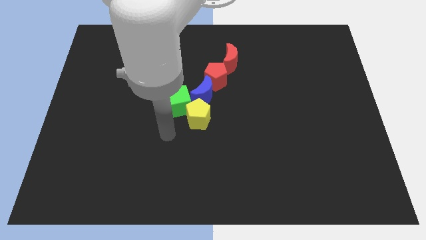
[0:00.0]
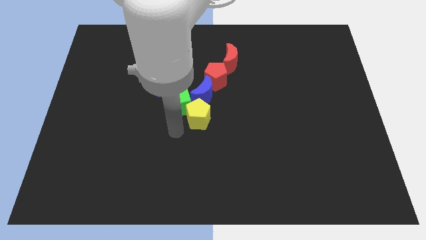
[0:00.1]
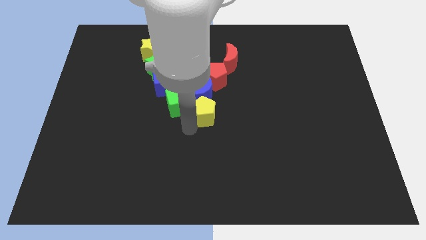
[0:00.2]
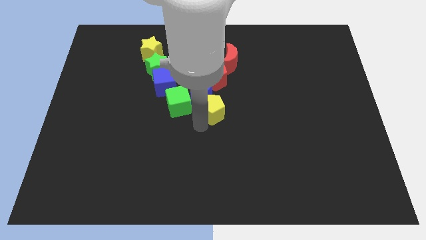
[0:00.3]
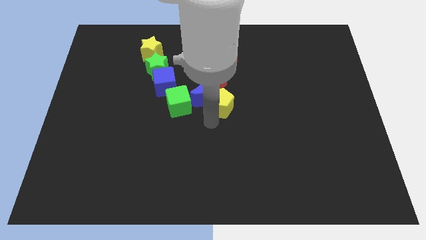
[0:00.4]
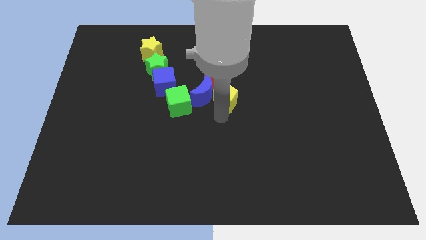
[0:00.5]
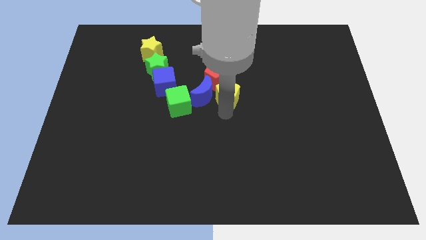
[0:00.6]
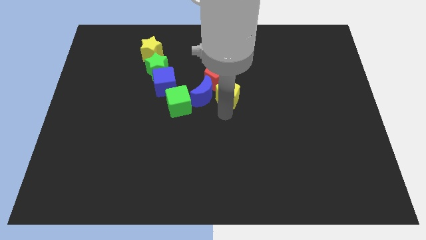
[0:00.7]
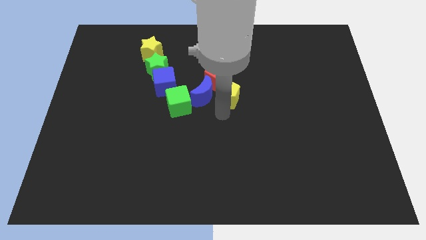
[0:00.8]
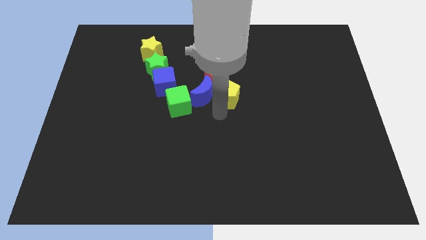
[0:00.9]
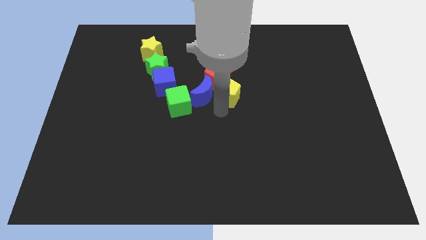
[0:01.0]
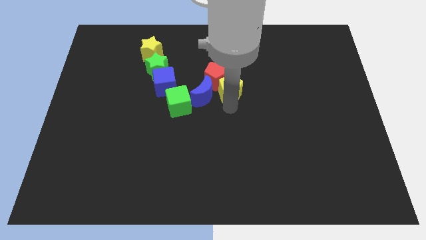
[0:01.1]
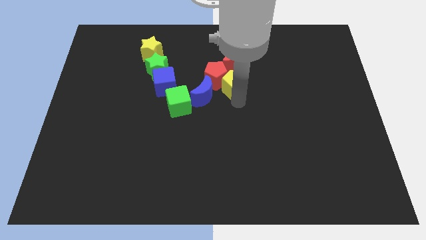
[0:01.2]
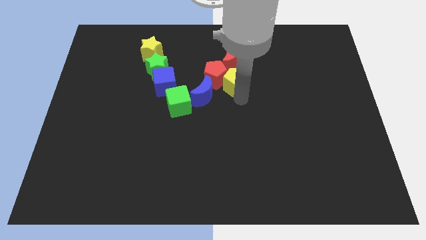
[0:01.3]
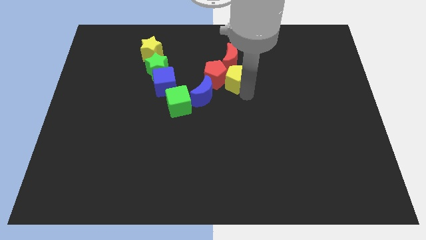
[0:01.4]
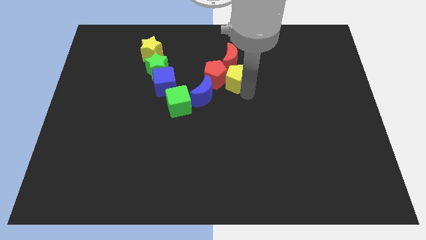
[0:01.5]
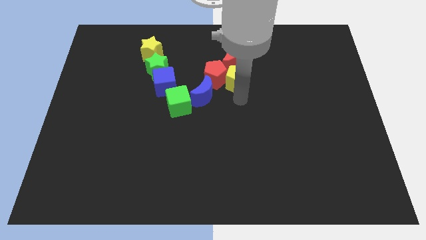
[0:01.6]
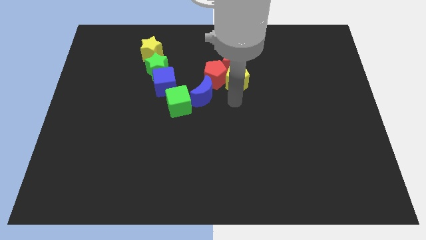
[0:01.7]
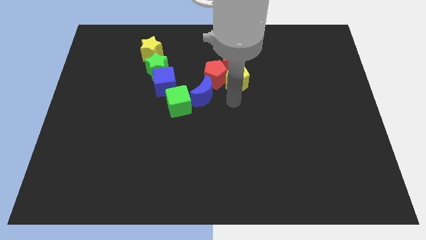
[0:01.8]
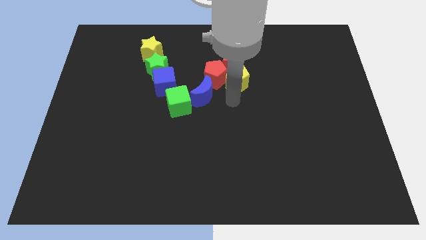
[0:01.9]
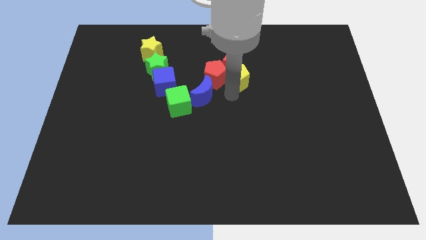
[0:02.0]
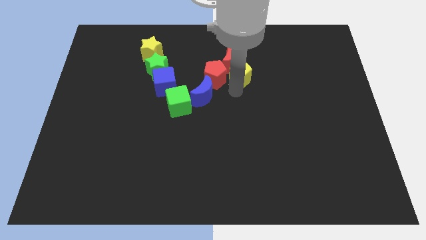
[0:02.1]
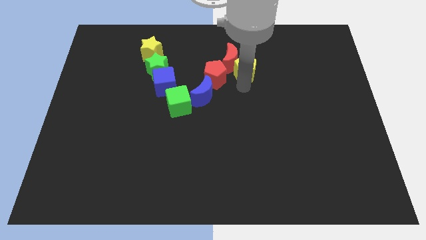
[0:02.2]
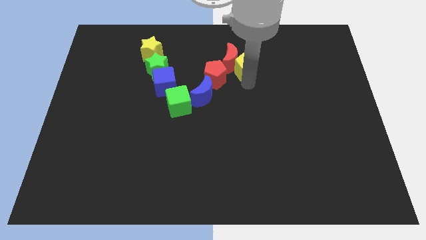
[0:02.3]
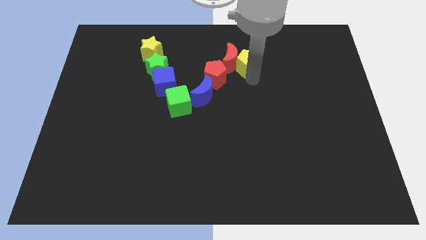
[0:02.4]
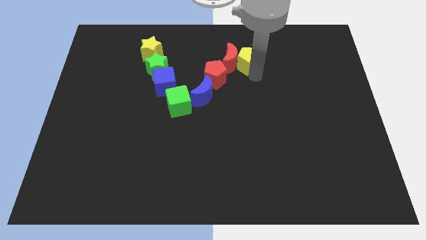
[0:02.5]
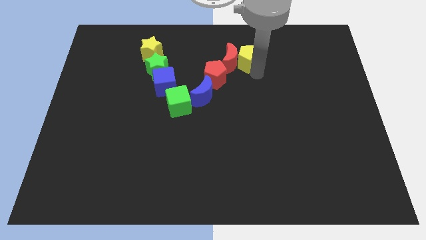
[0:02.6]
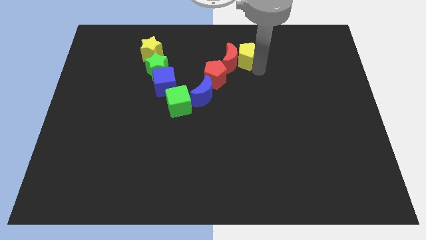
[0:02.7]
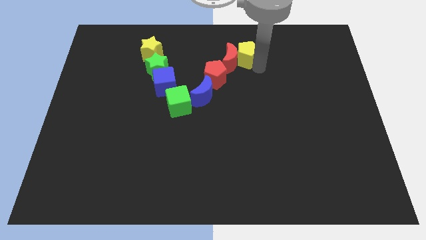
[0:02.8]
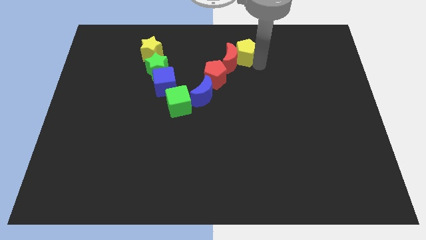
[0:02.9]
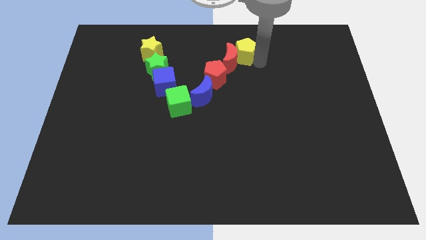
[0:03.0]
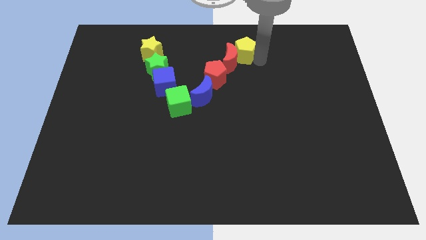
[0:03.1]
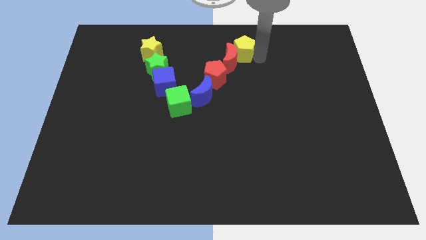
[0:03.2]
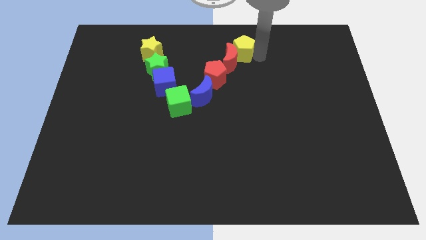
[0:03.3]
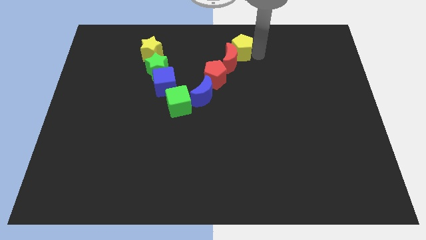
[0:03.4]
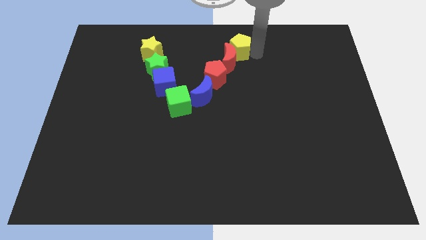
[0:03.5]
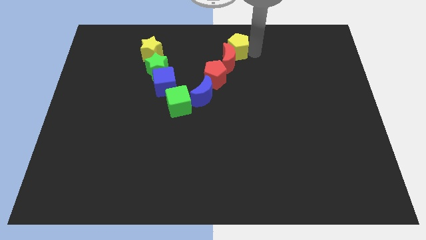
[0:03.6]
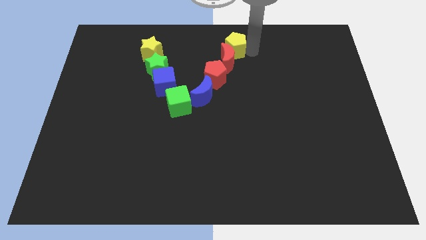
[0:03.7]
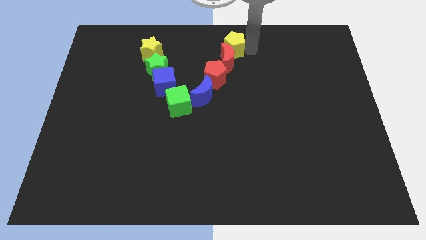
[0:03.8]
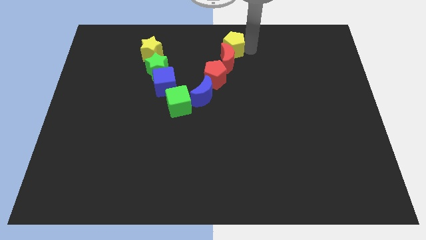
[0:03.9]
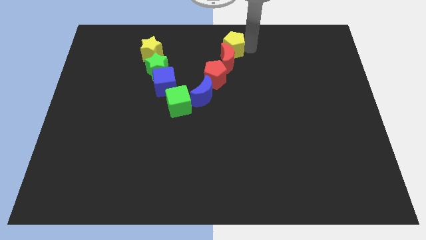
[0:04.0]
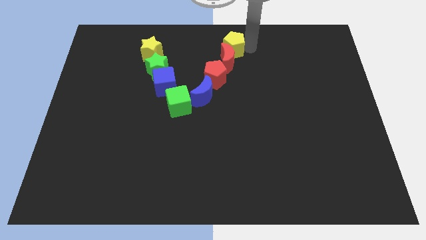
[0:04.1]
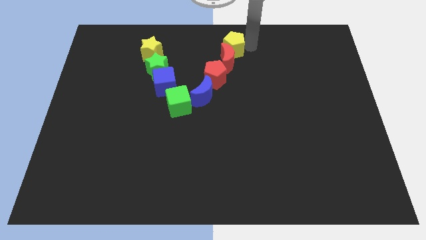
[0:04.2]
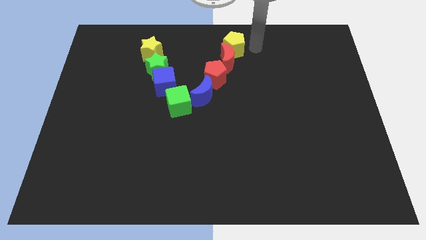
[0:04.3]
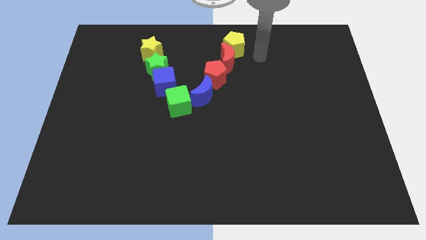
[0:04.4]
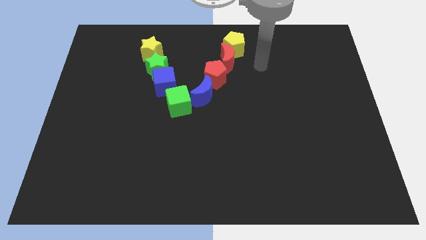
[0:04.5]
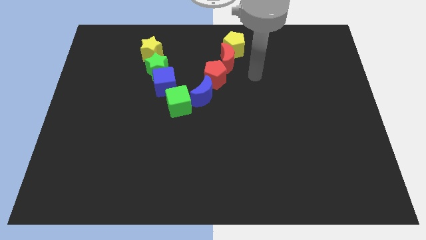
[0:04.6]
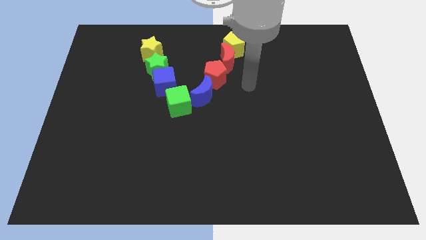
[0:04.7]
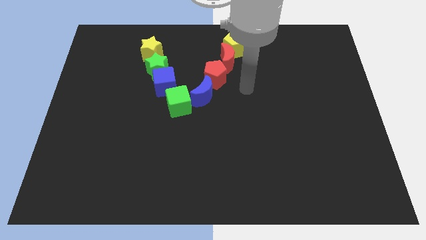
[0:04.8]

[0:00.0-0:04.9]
place the yellow pentagon above the red moon

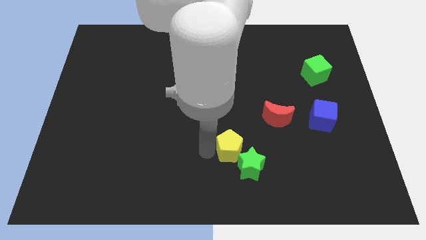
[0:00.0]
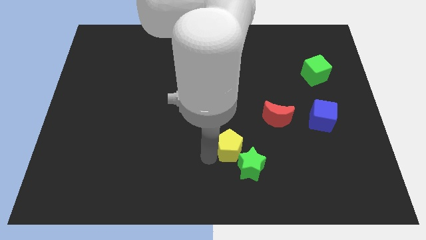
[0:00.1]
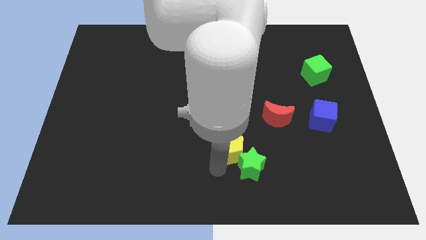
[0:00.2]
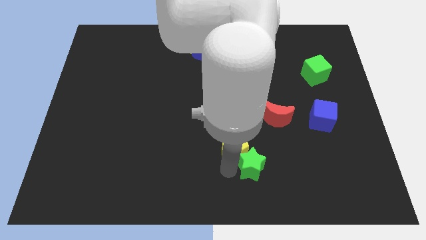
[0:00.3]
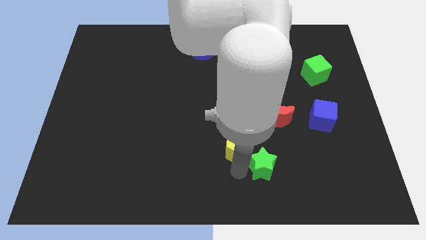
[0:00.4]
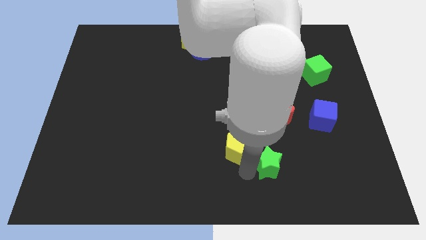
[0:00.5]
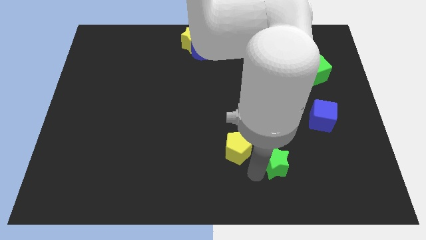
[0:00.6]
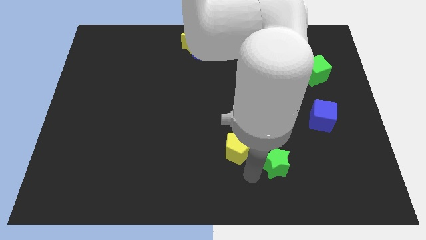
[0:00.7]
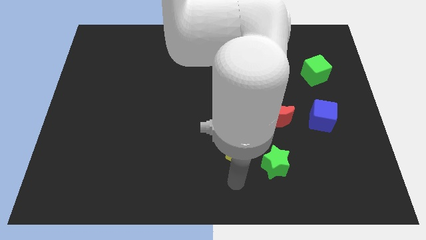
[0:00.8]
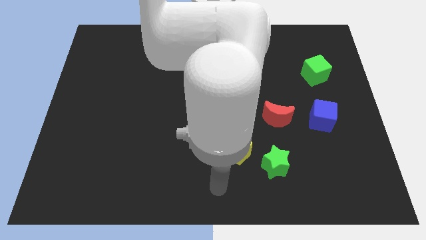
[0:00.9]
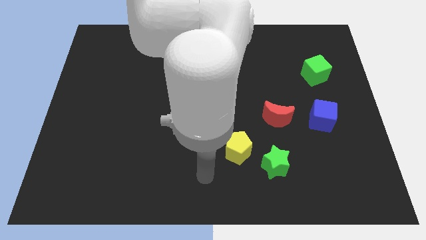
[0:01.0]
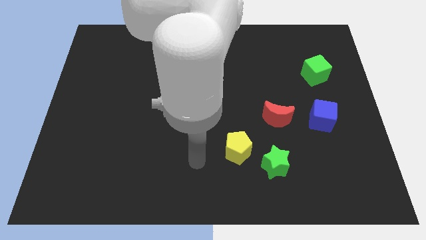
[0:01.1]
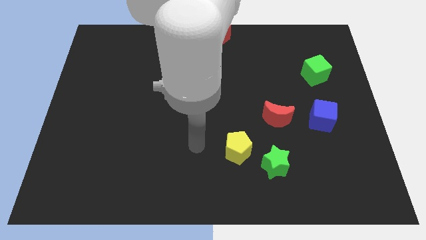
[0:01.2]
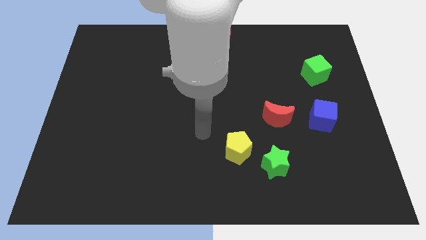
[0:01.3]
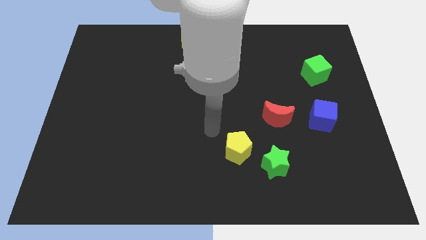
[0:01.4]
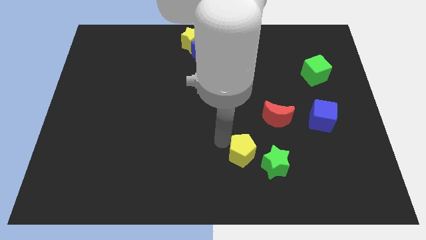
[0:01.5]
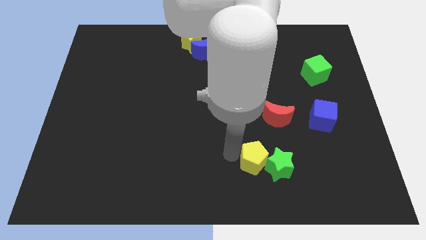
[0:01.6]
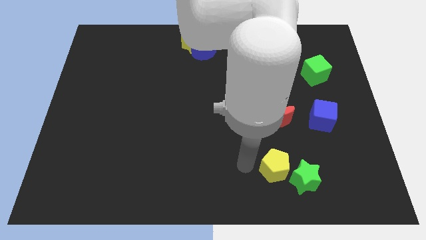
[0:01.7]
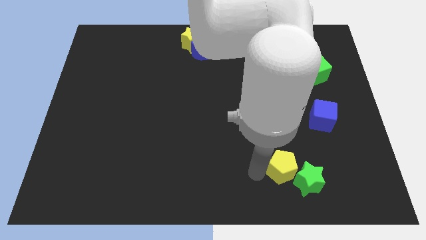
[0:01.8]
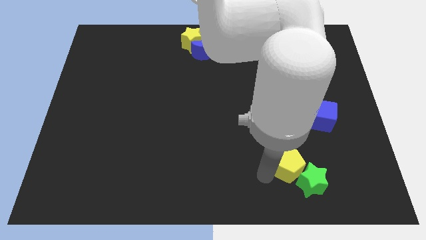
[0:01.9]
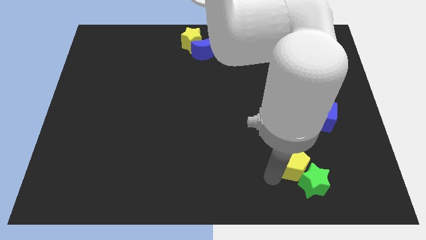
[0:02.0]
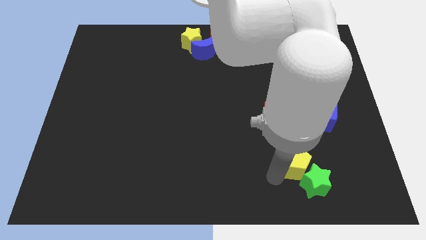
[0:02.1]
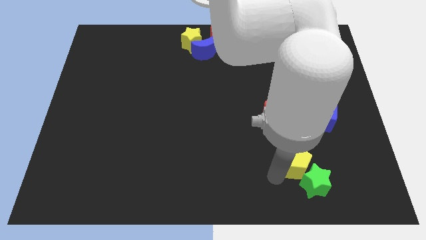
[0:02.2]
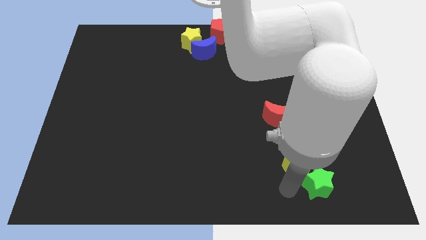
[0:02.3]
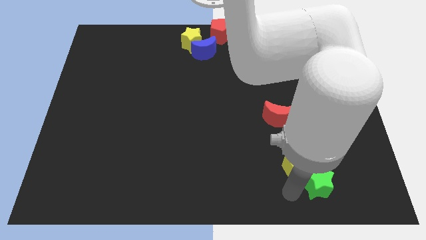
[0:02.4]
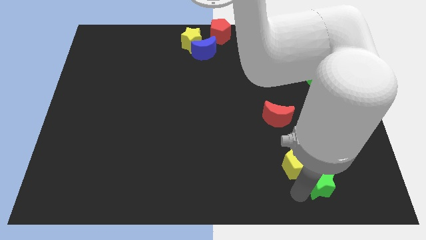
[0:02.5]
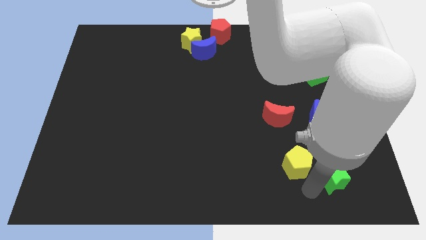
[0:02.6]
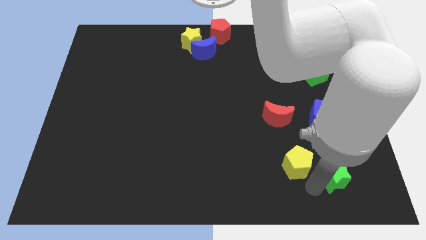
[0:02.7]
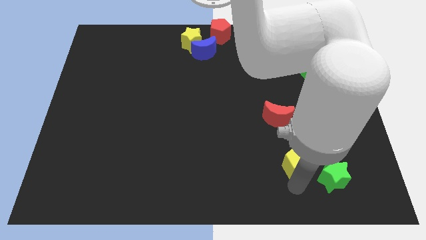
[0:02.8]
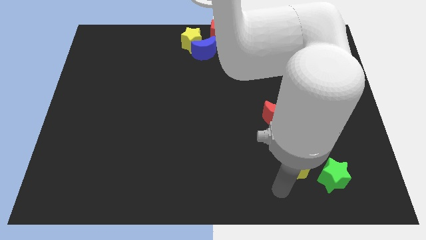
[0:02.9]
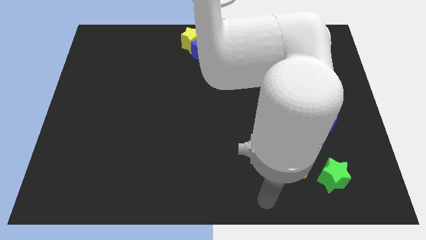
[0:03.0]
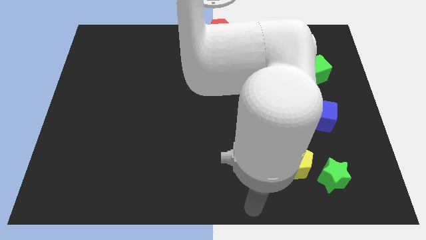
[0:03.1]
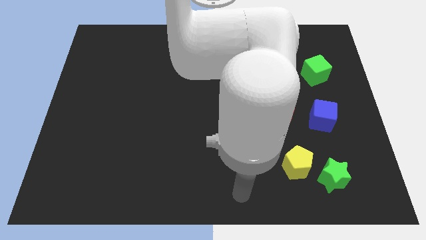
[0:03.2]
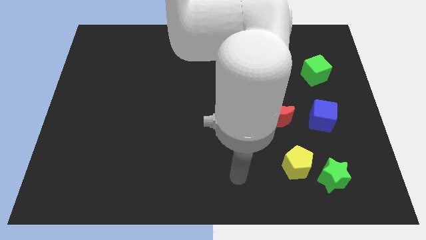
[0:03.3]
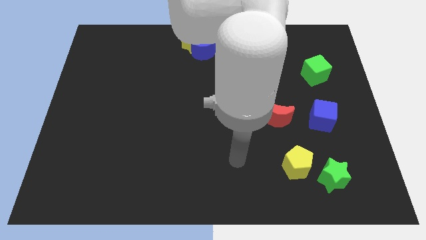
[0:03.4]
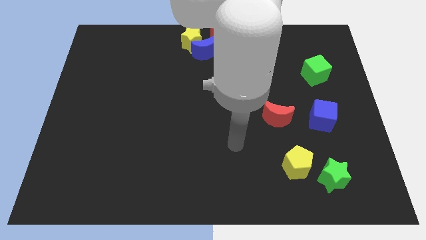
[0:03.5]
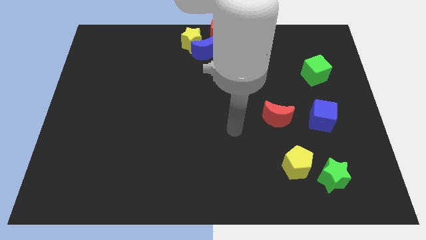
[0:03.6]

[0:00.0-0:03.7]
move the yellow pentagon towards the right bottom of the board

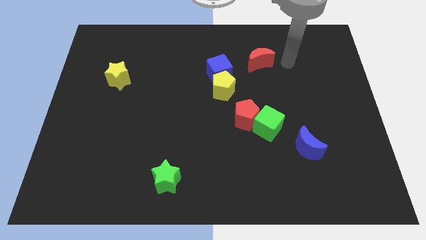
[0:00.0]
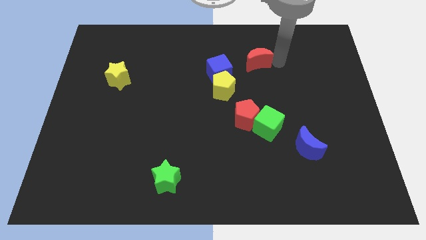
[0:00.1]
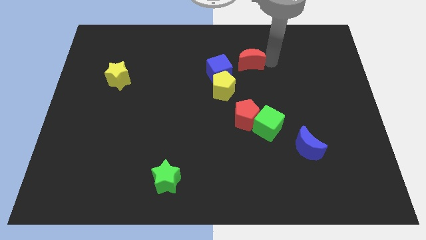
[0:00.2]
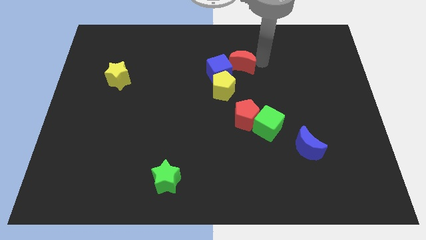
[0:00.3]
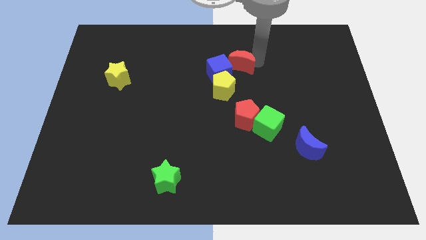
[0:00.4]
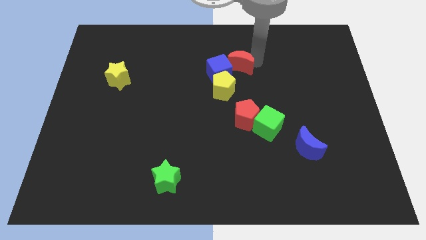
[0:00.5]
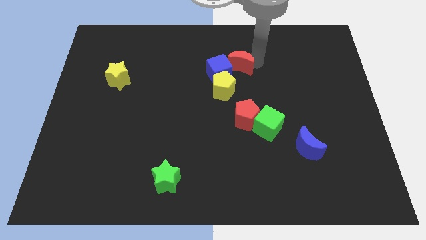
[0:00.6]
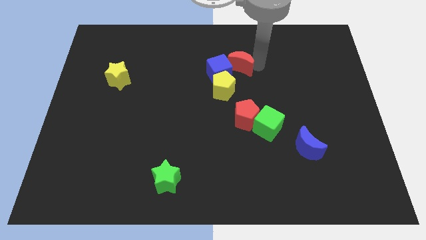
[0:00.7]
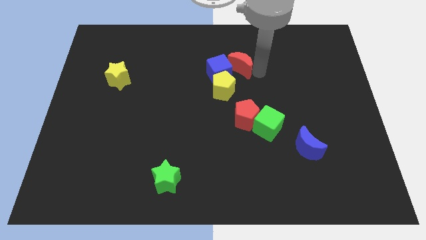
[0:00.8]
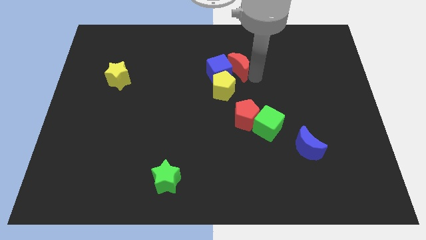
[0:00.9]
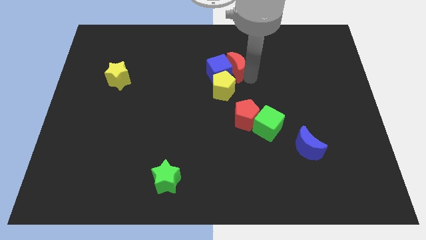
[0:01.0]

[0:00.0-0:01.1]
place the red moon closer to the blue cube
